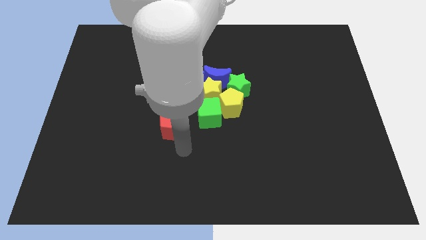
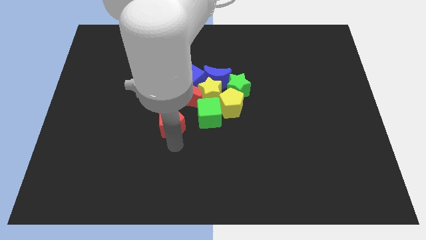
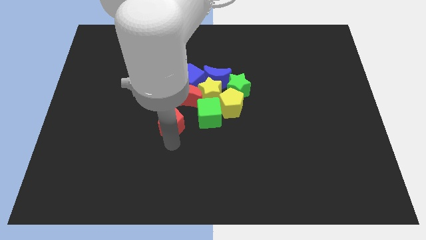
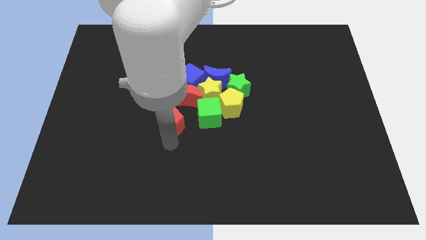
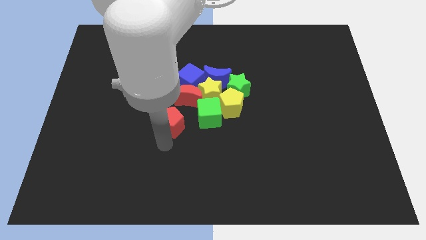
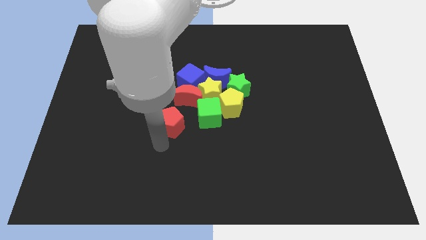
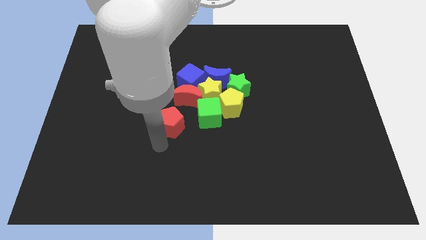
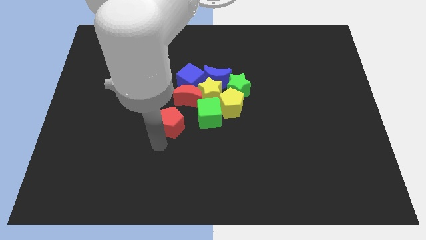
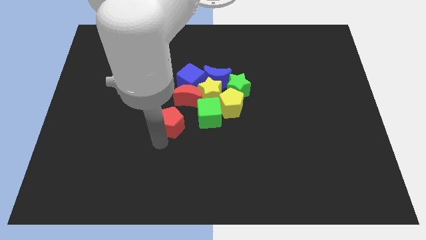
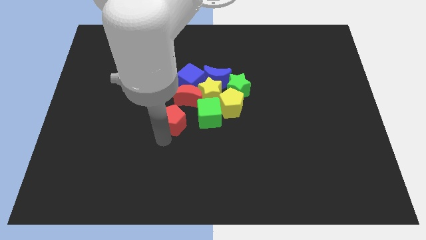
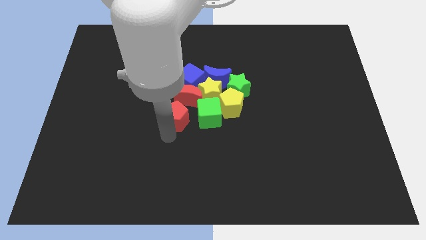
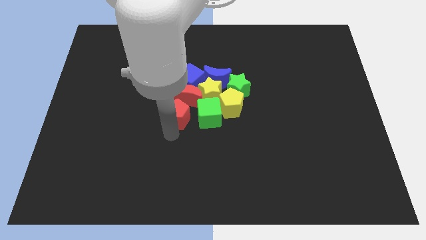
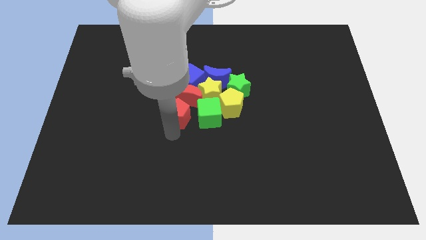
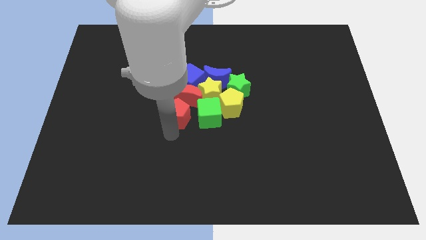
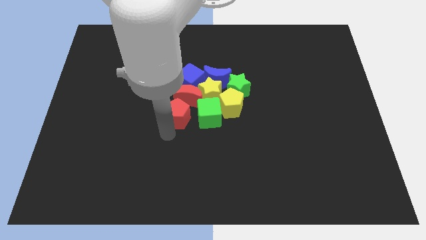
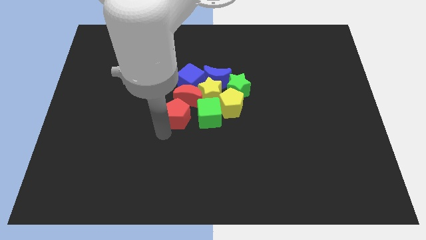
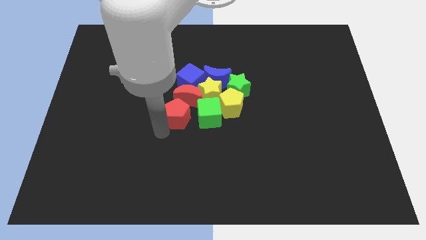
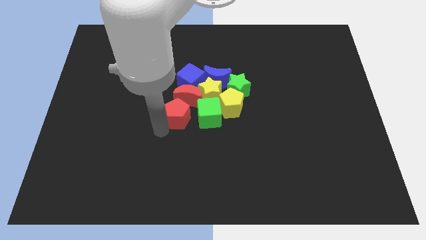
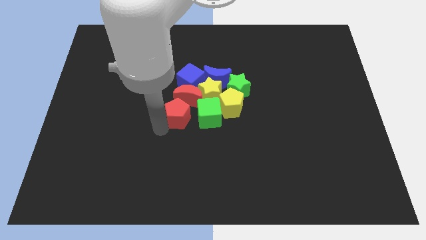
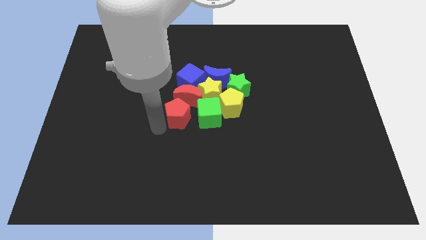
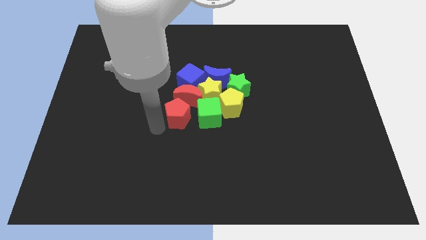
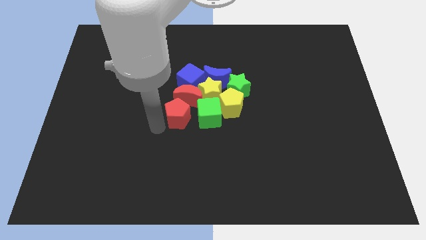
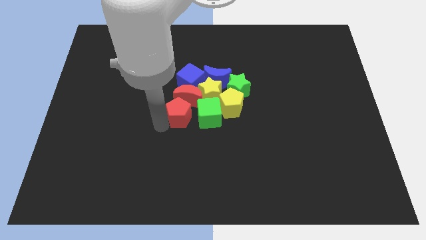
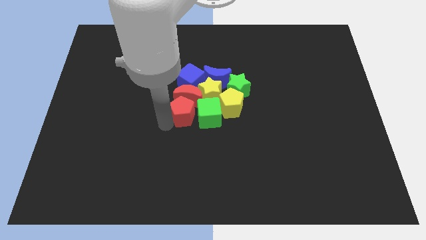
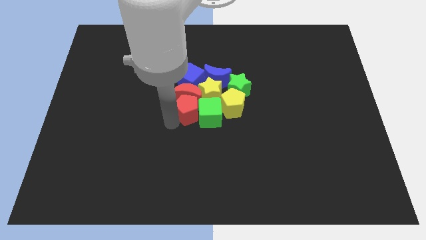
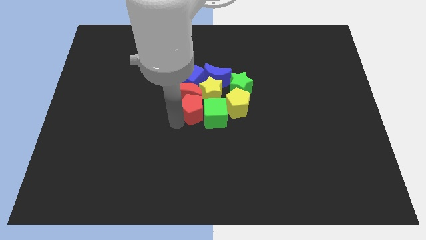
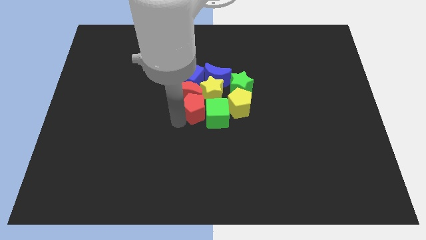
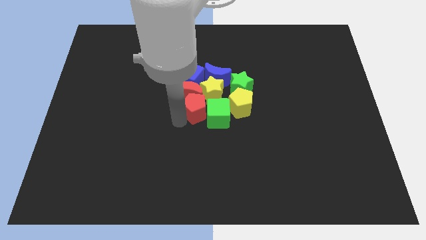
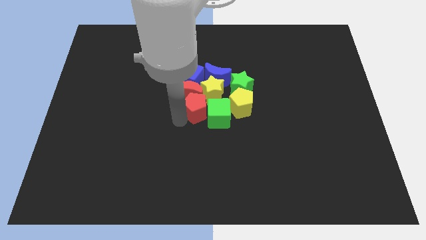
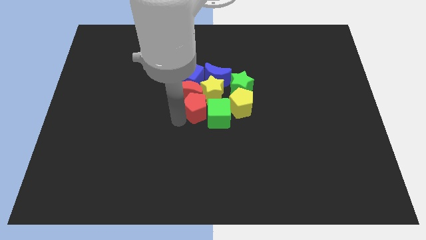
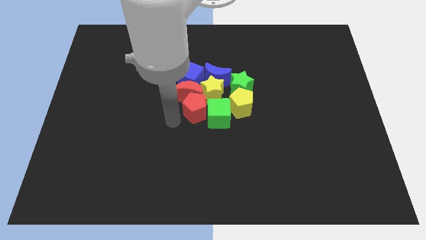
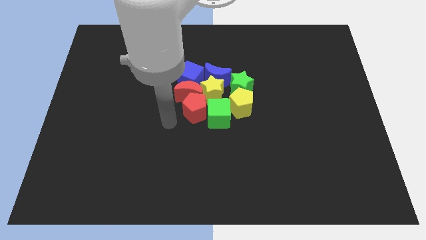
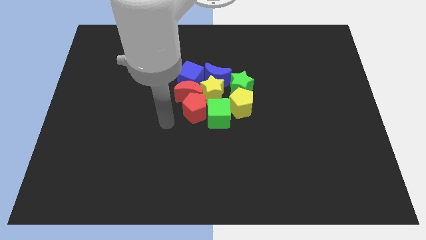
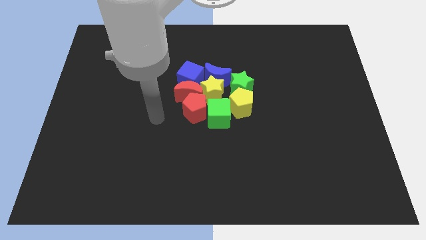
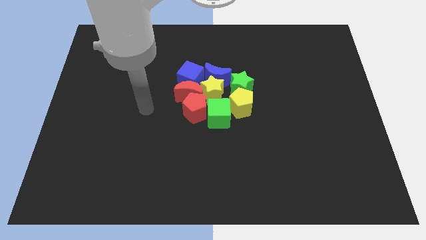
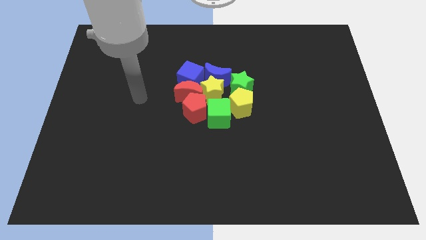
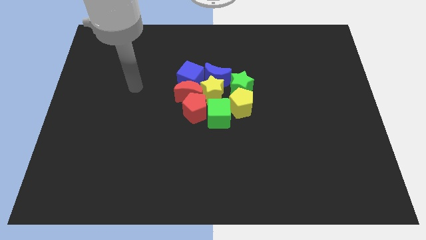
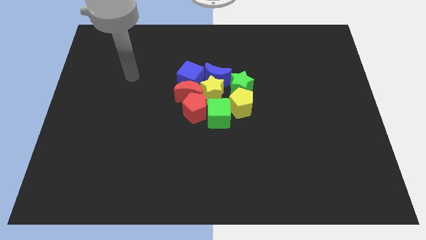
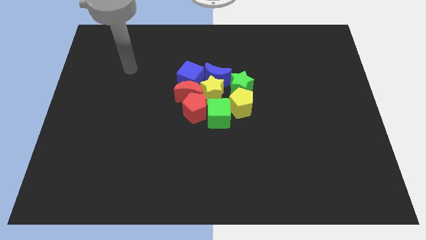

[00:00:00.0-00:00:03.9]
add the red pentagon to the group of all the blocks

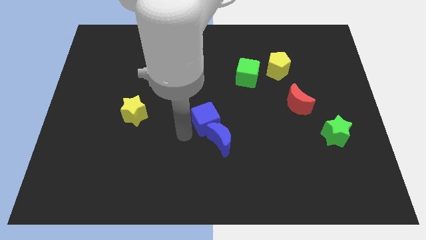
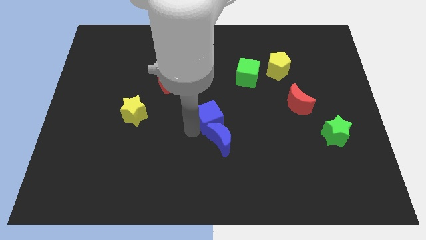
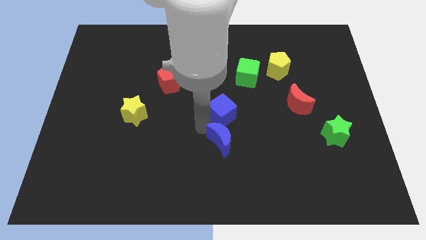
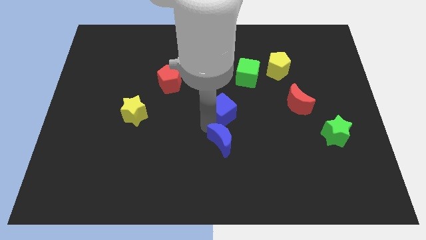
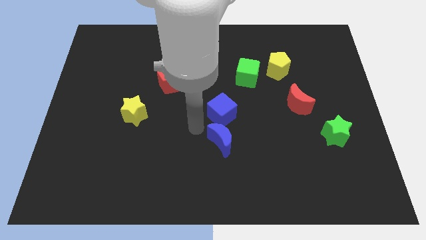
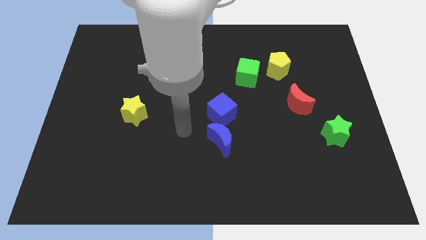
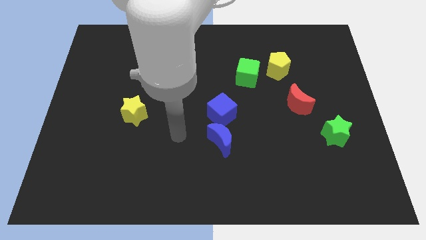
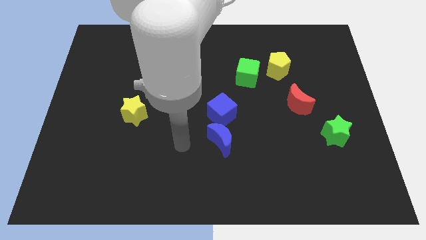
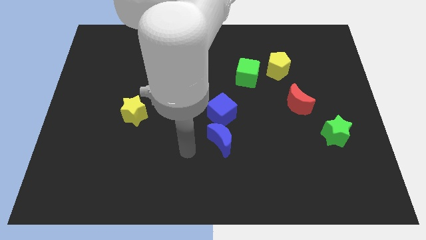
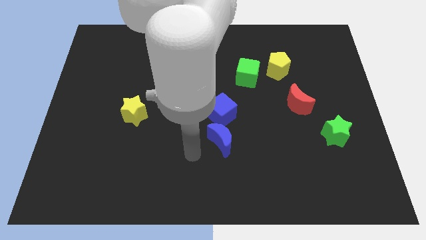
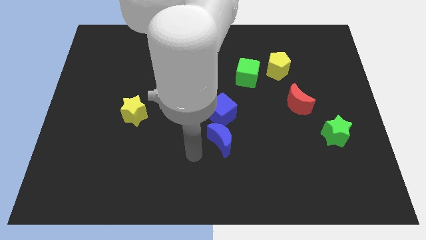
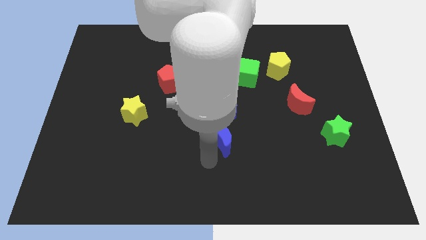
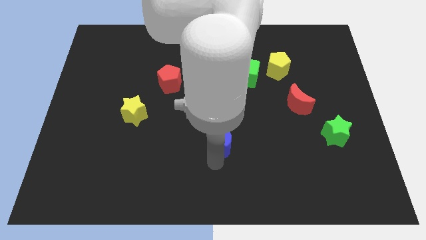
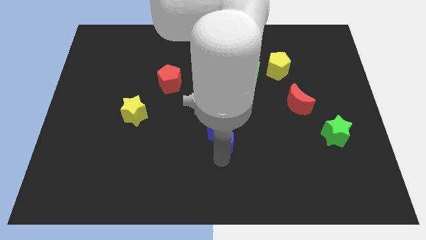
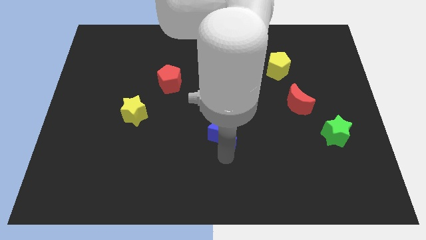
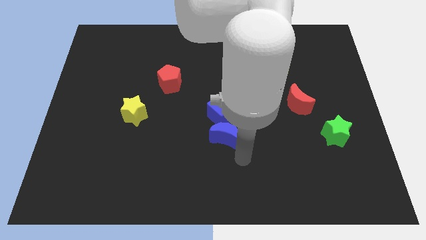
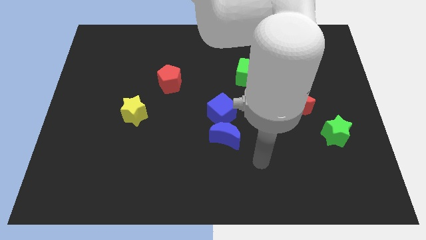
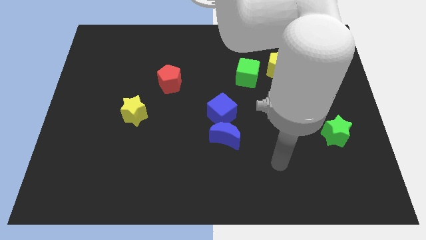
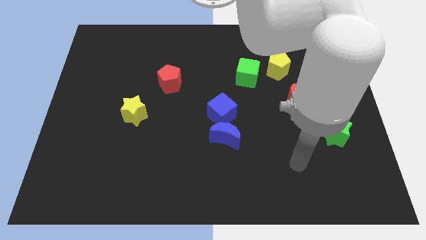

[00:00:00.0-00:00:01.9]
move the blue cube vertically above the blue moon

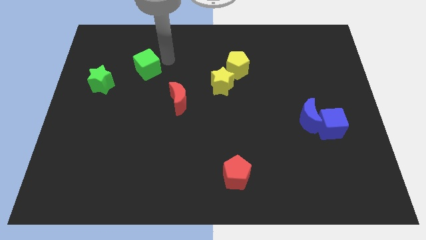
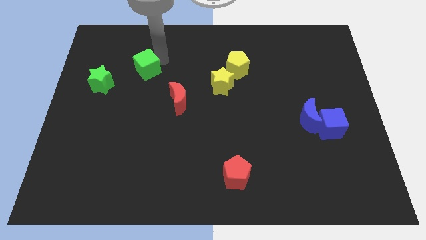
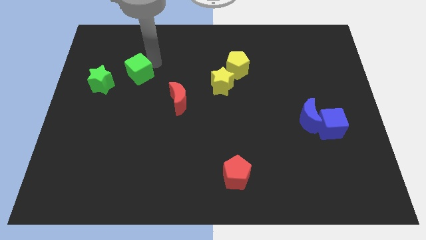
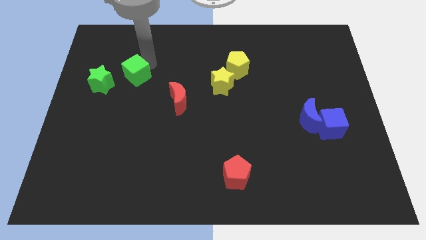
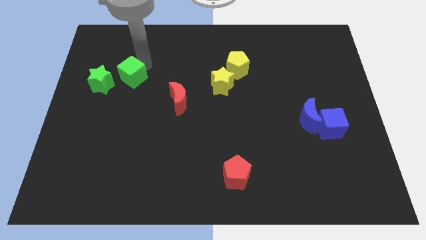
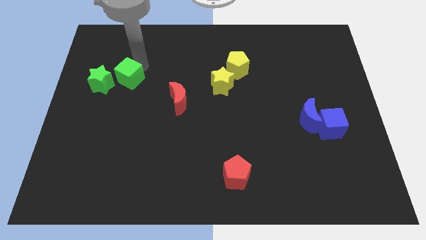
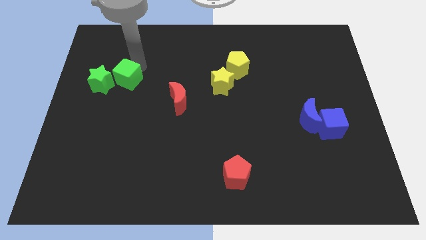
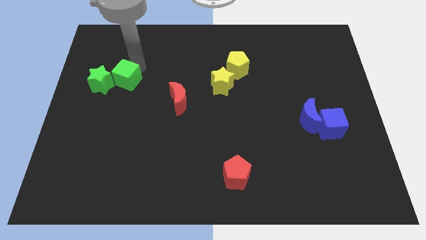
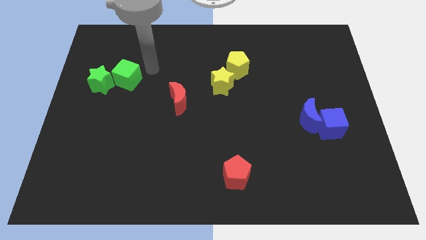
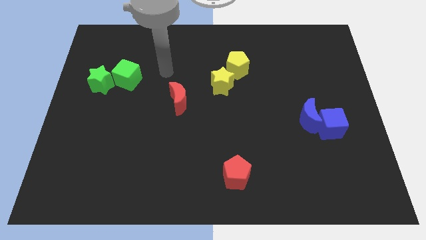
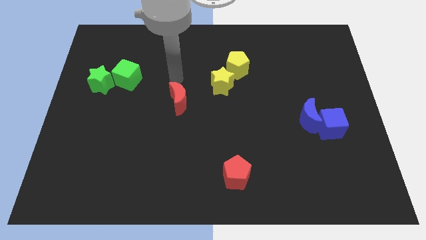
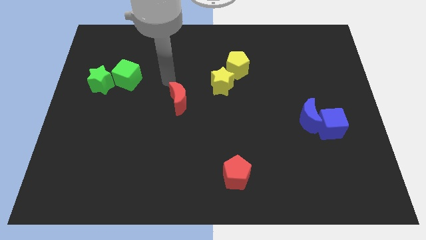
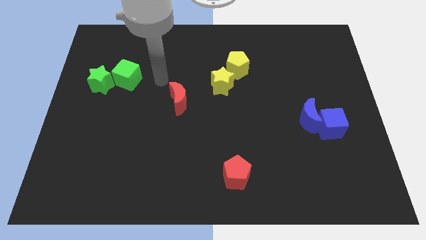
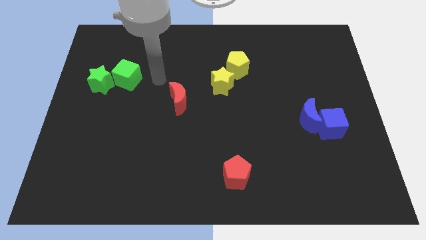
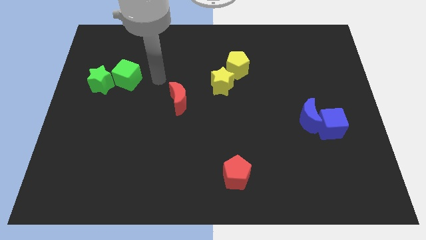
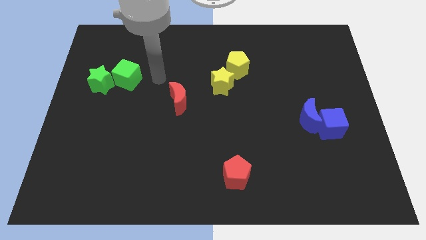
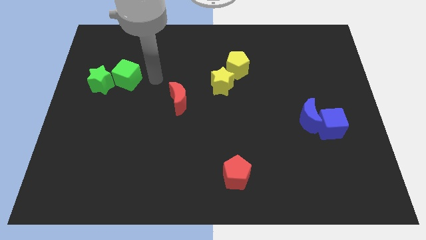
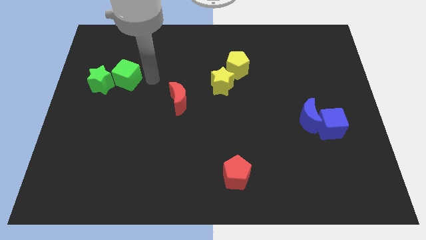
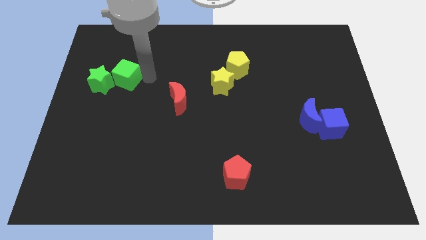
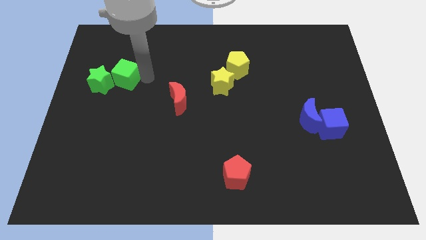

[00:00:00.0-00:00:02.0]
move the green cube right beside the green star

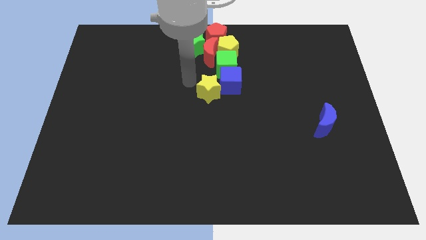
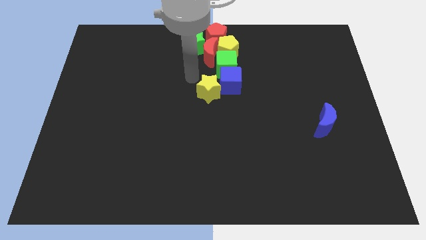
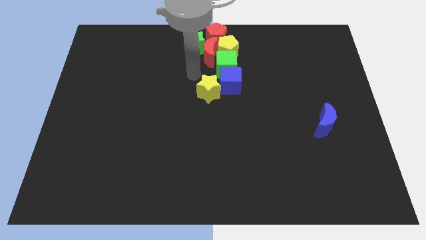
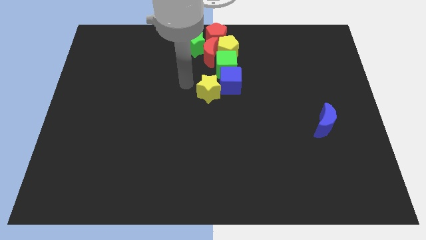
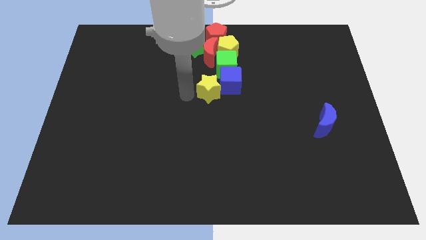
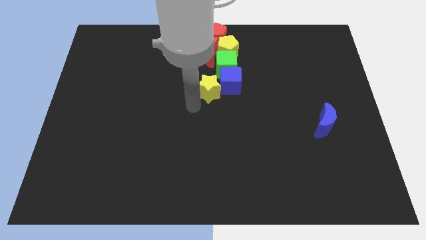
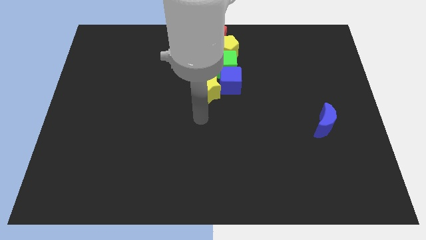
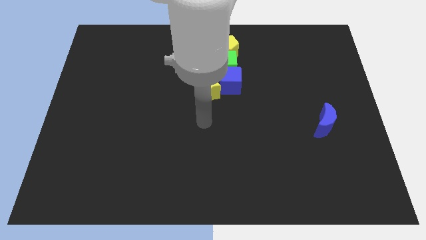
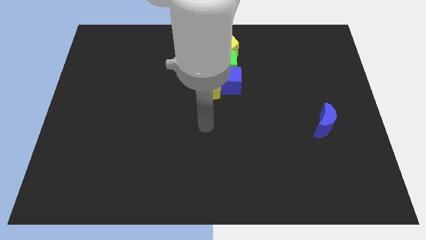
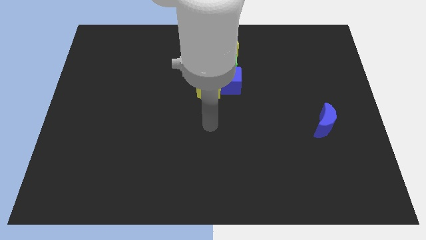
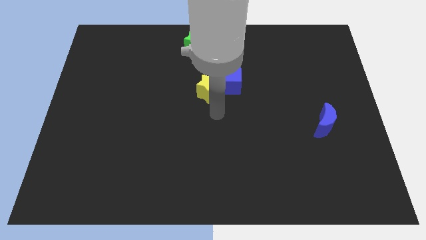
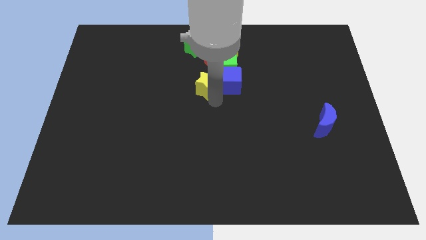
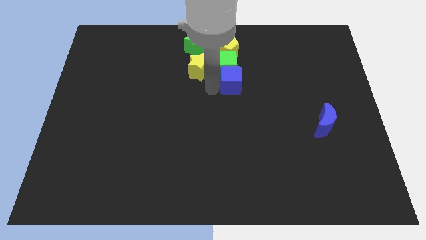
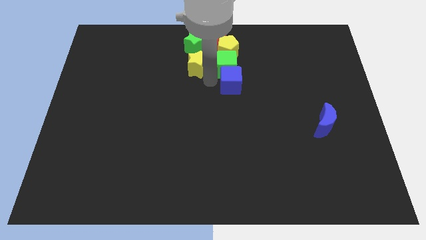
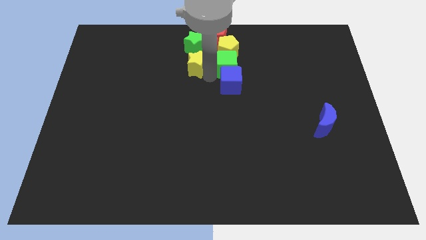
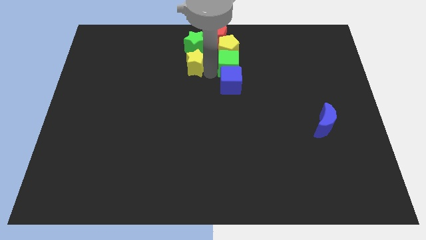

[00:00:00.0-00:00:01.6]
move the yellow star towards the bottom side of the green star
